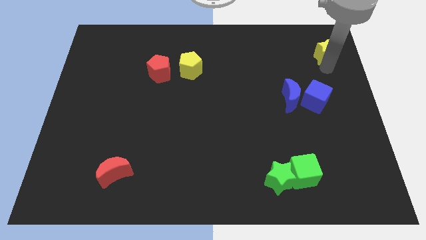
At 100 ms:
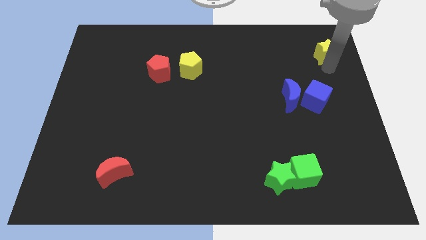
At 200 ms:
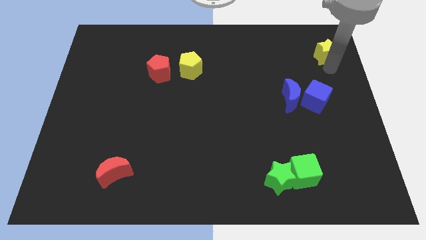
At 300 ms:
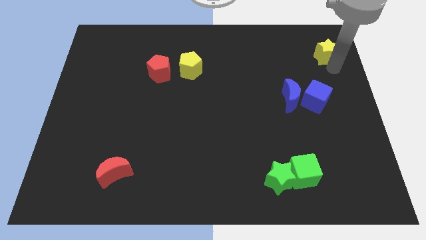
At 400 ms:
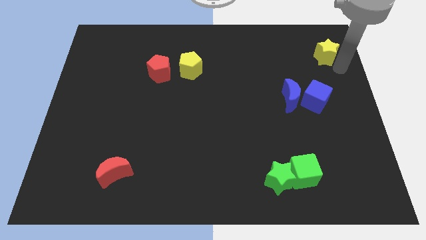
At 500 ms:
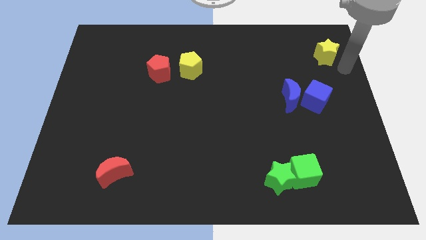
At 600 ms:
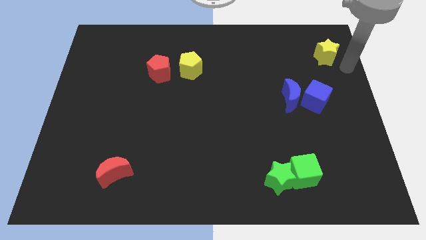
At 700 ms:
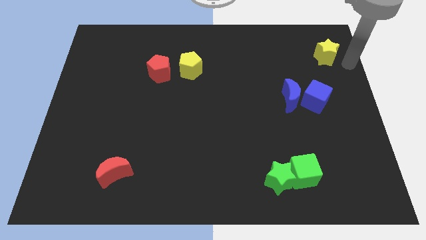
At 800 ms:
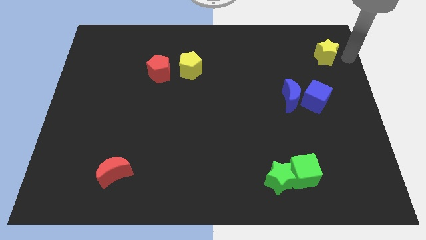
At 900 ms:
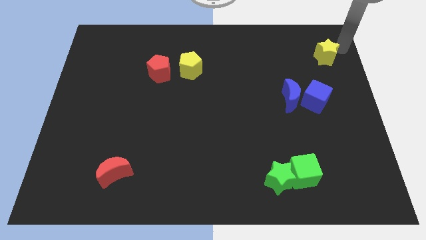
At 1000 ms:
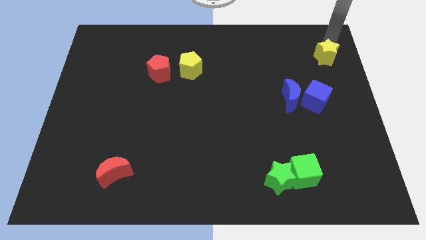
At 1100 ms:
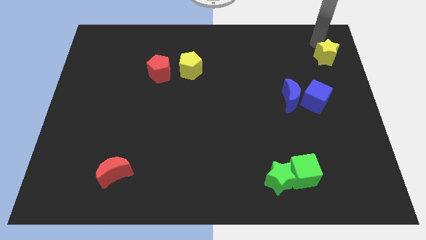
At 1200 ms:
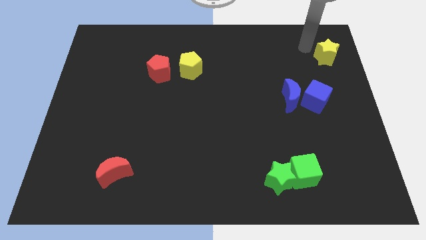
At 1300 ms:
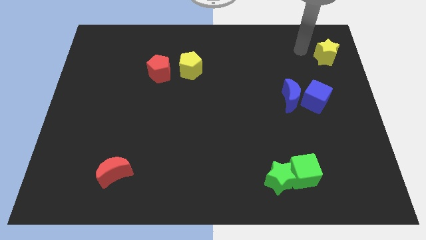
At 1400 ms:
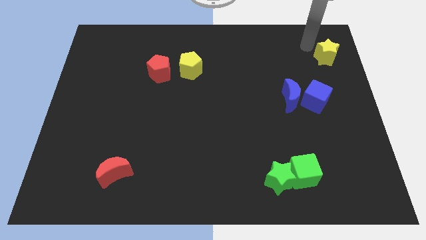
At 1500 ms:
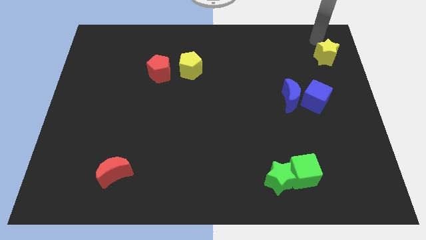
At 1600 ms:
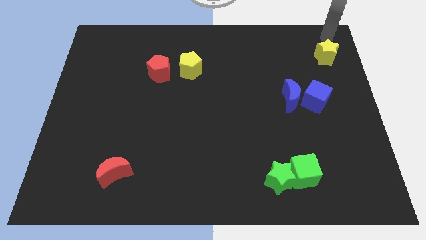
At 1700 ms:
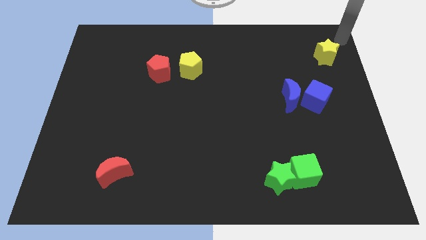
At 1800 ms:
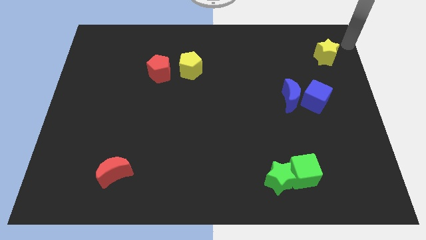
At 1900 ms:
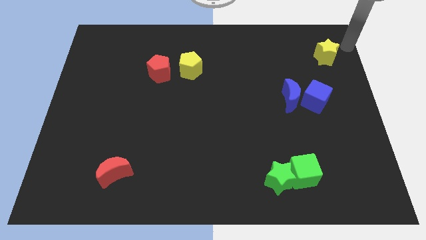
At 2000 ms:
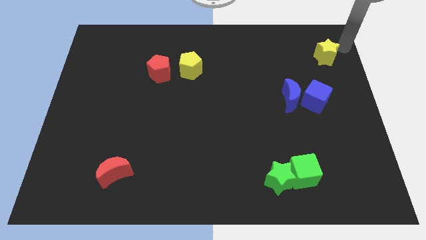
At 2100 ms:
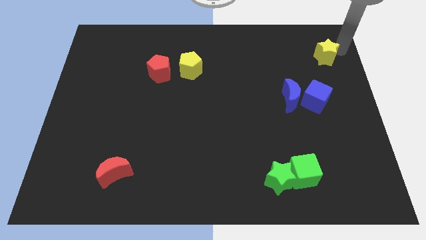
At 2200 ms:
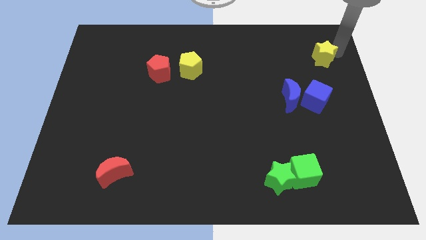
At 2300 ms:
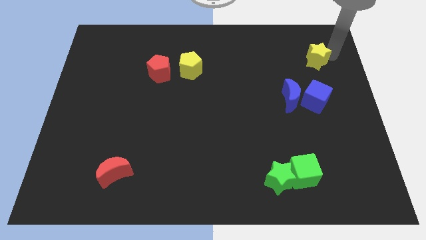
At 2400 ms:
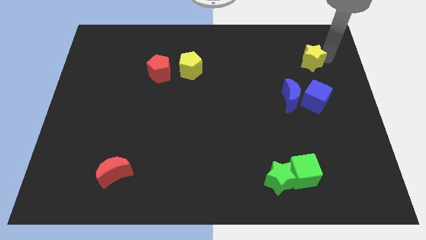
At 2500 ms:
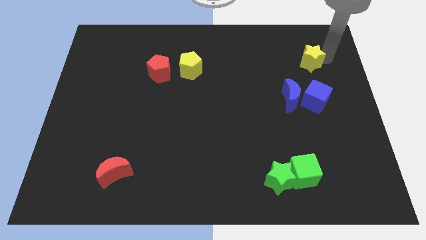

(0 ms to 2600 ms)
point your arm above yellow star

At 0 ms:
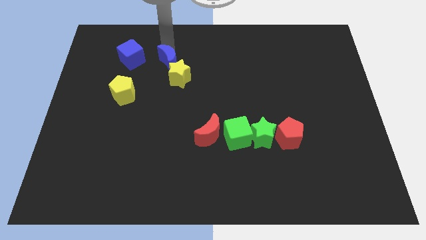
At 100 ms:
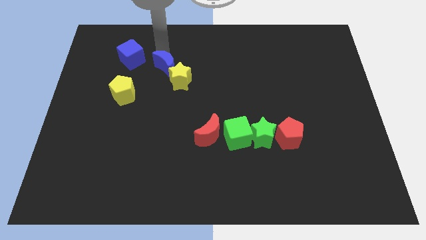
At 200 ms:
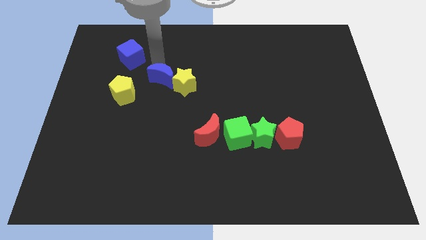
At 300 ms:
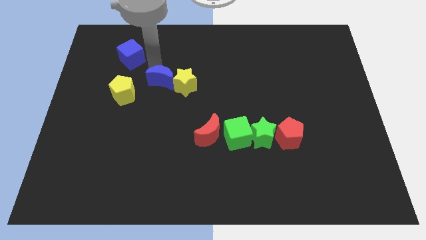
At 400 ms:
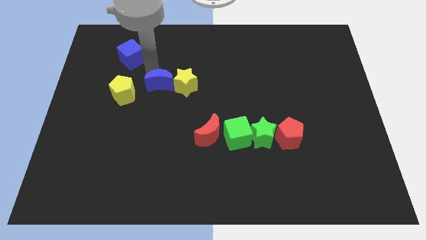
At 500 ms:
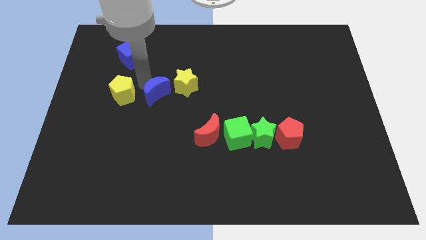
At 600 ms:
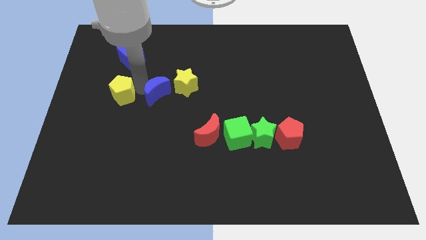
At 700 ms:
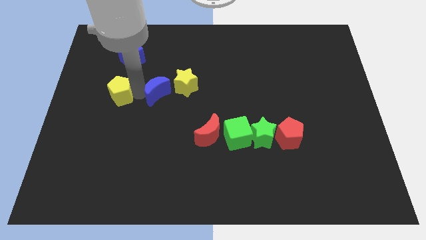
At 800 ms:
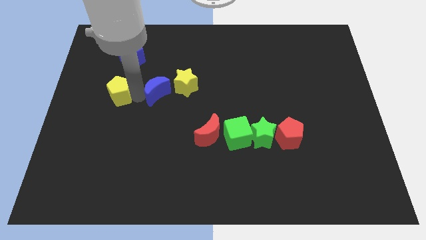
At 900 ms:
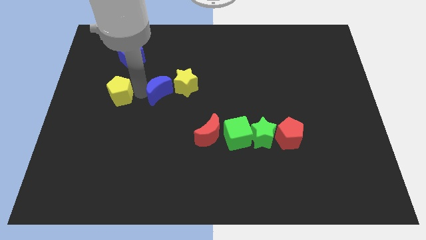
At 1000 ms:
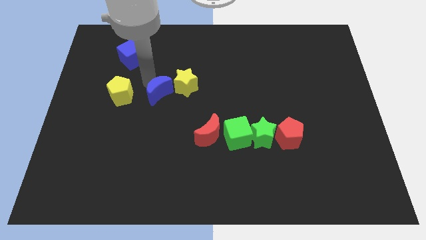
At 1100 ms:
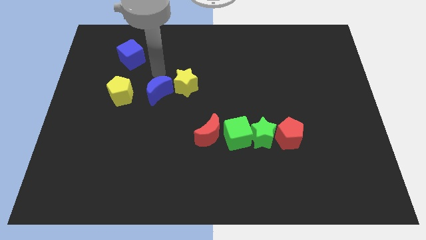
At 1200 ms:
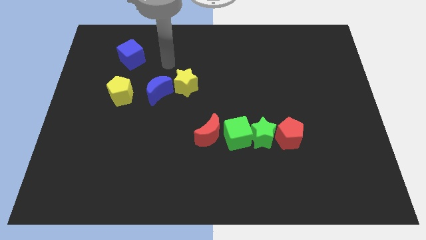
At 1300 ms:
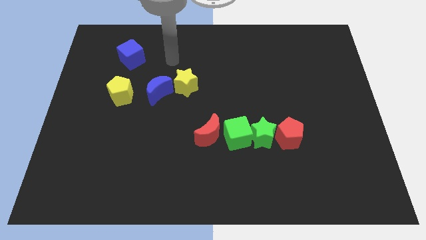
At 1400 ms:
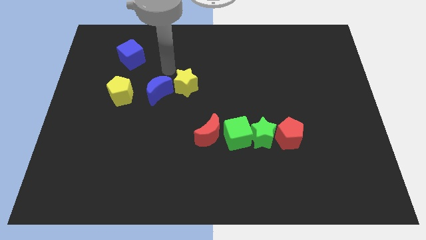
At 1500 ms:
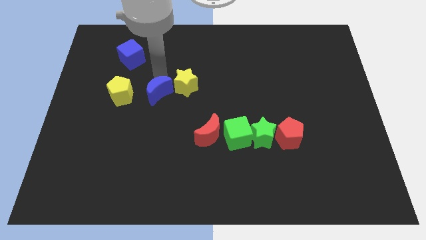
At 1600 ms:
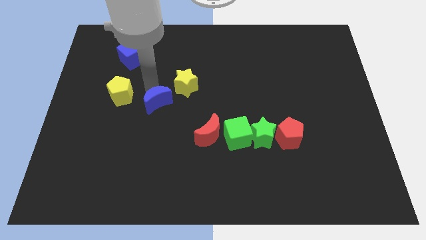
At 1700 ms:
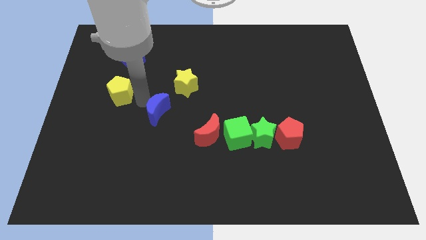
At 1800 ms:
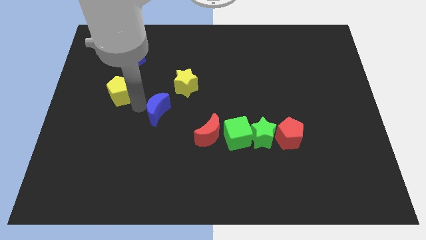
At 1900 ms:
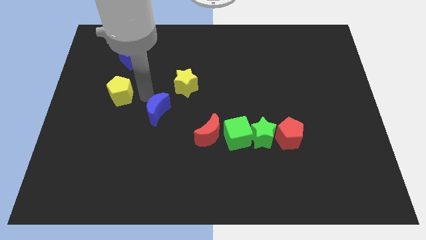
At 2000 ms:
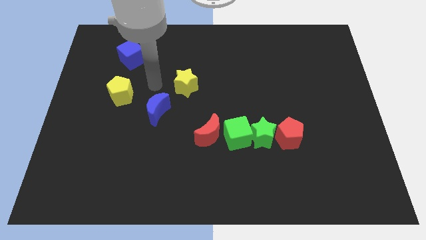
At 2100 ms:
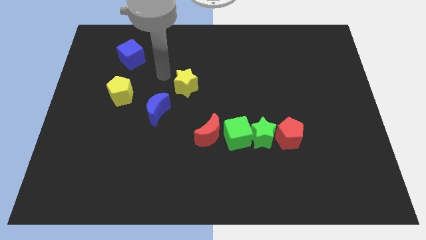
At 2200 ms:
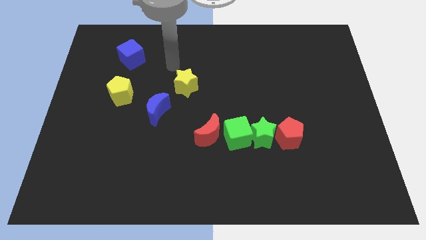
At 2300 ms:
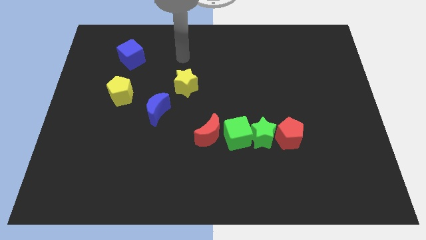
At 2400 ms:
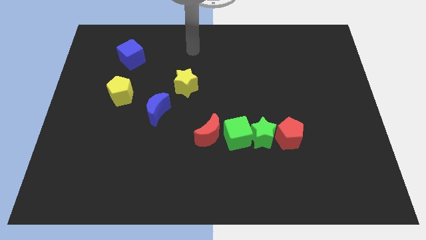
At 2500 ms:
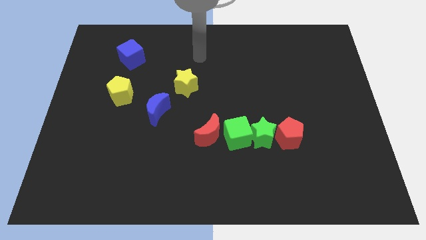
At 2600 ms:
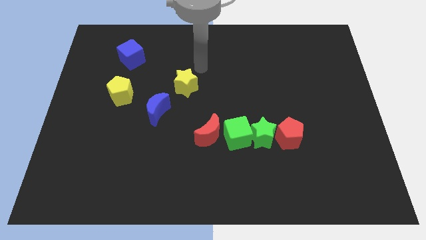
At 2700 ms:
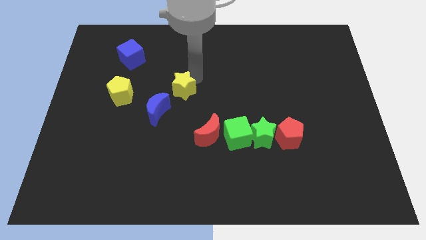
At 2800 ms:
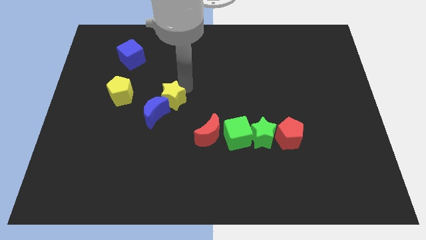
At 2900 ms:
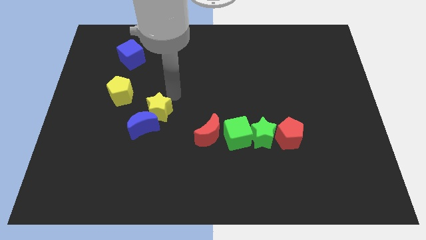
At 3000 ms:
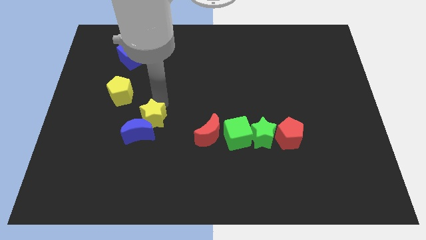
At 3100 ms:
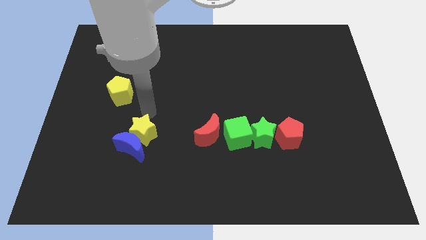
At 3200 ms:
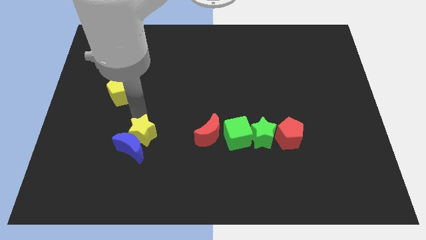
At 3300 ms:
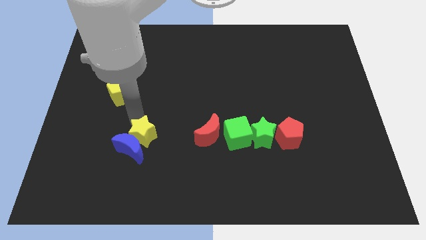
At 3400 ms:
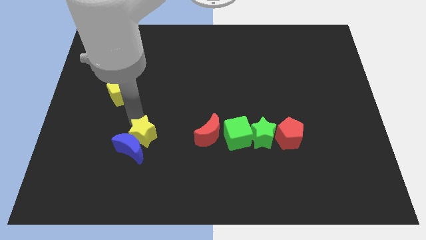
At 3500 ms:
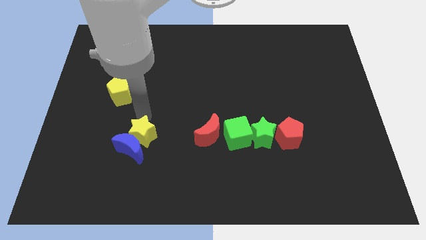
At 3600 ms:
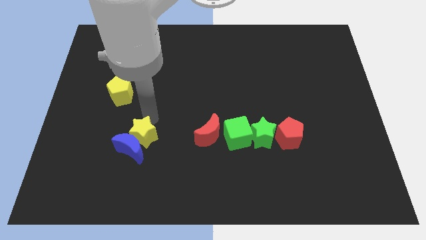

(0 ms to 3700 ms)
move the blue crescent slightly down with the yellow star

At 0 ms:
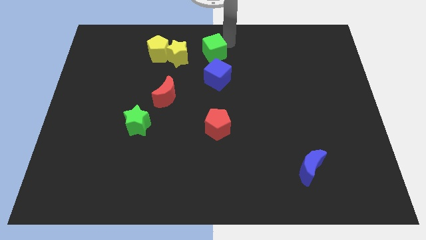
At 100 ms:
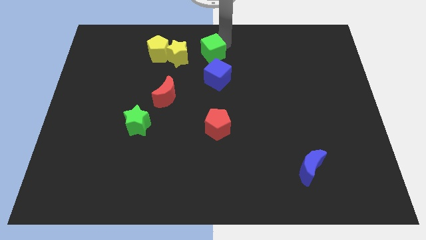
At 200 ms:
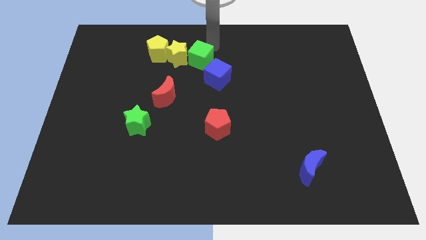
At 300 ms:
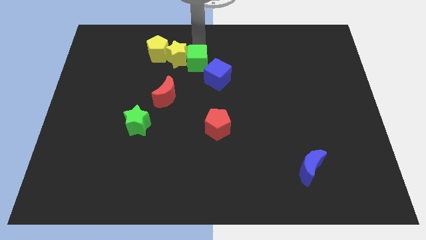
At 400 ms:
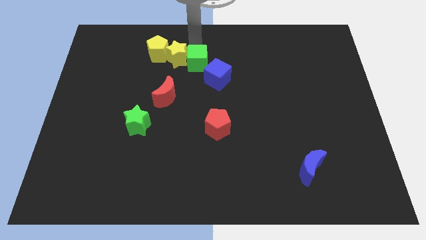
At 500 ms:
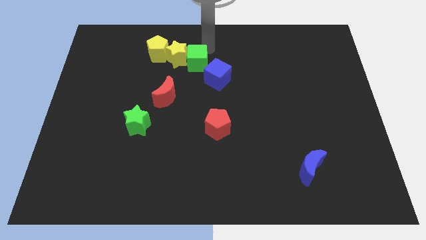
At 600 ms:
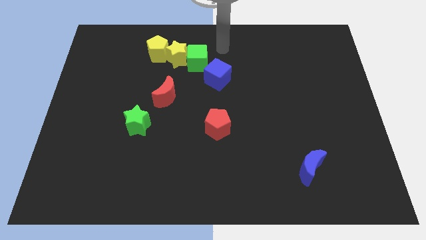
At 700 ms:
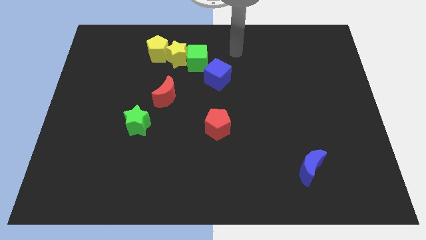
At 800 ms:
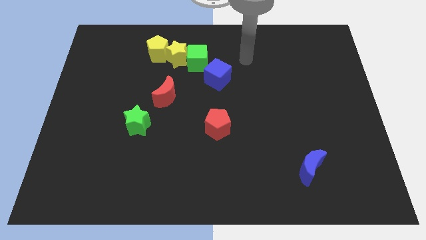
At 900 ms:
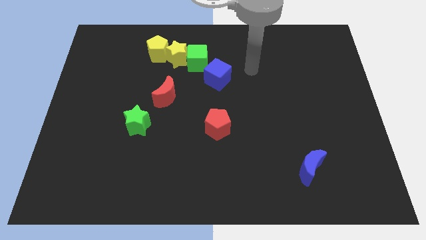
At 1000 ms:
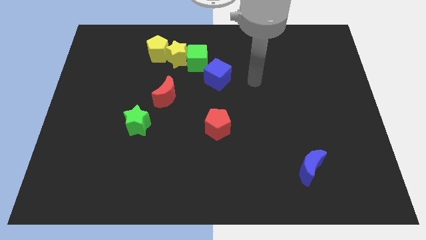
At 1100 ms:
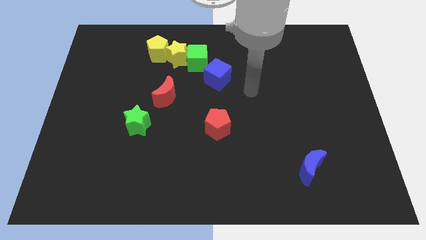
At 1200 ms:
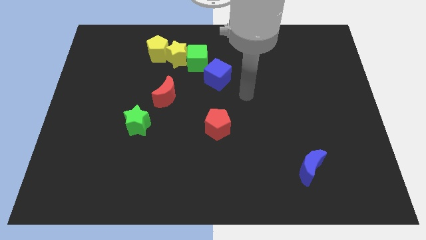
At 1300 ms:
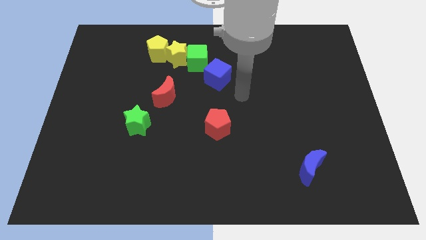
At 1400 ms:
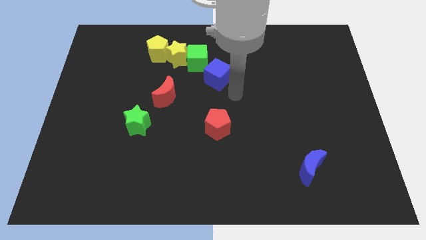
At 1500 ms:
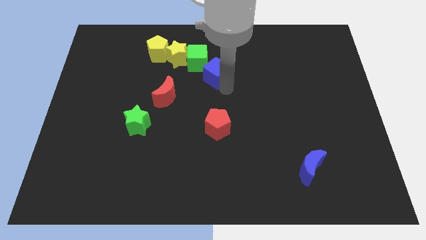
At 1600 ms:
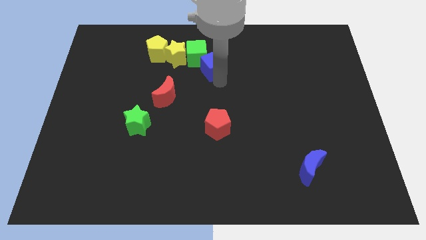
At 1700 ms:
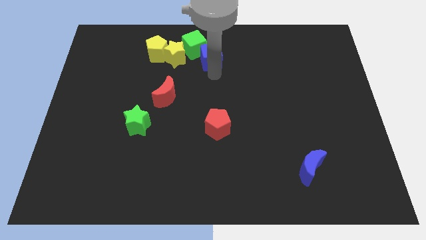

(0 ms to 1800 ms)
push the green cube into yellow star

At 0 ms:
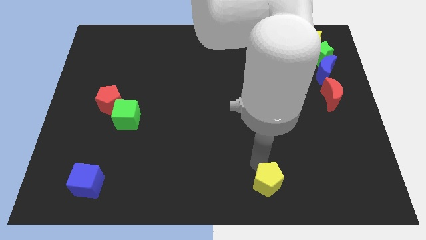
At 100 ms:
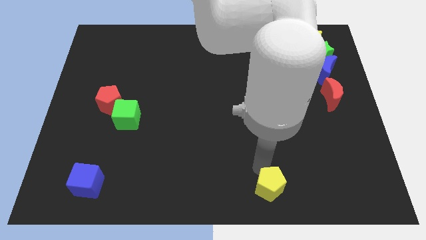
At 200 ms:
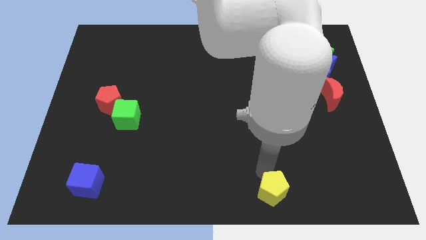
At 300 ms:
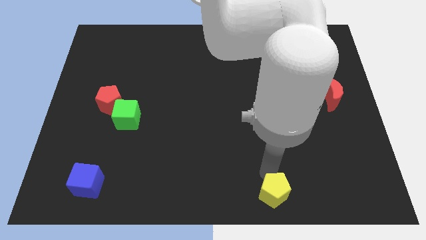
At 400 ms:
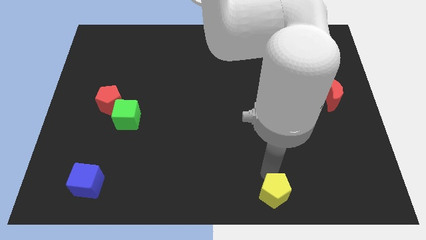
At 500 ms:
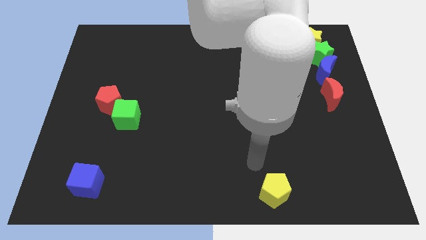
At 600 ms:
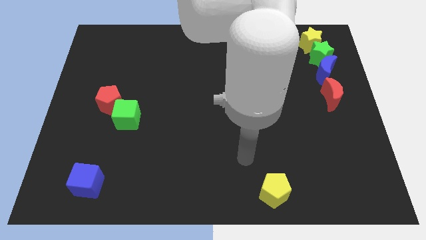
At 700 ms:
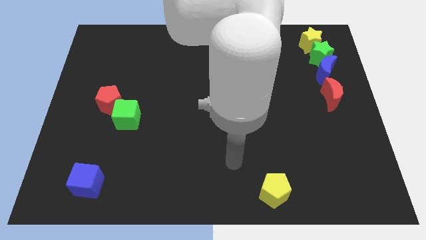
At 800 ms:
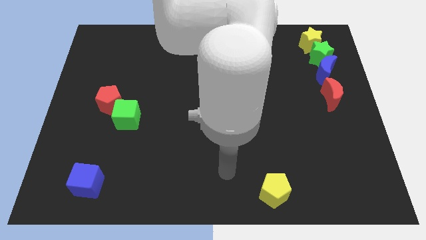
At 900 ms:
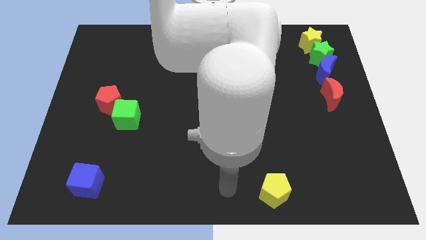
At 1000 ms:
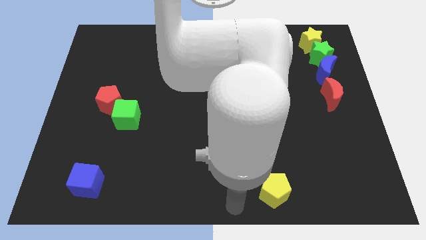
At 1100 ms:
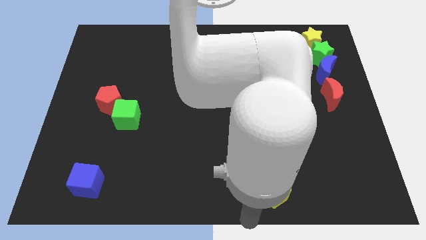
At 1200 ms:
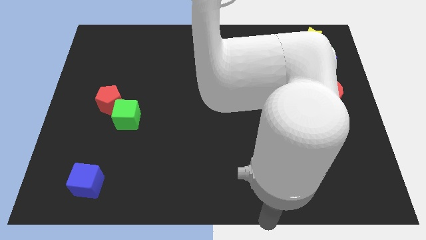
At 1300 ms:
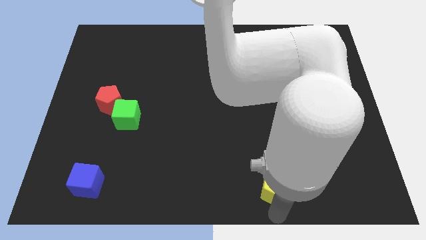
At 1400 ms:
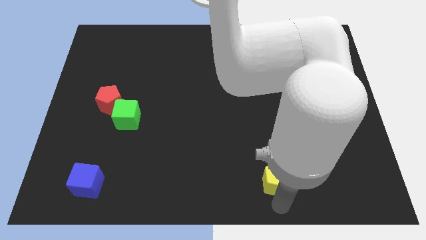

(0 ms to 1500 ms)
move the yellow pentagon to the bottom of the board
